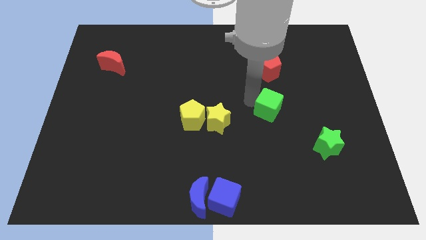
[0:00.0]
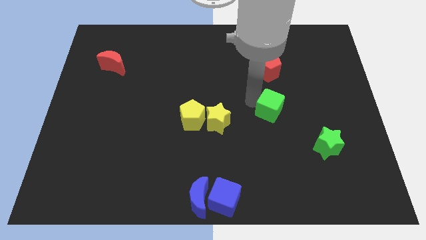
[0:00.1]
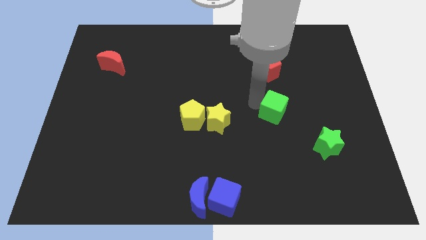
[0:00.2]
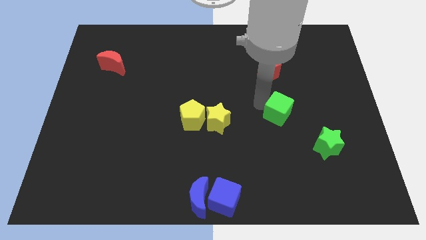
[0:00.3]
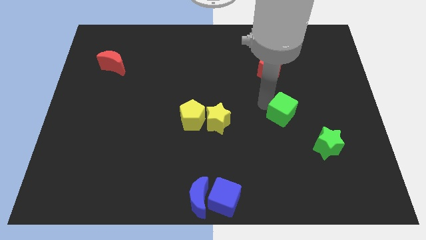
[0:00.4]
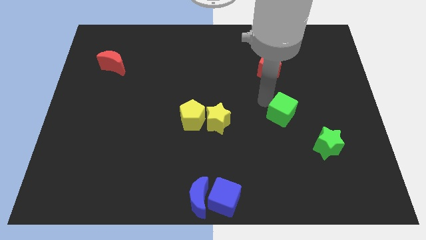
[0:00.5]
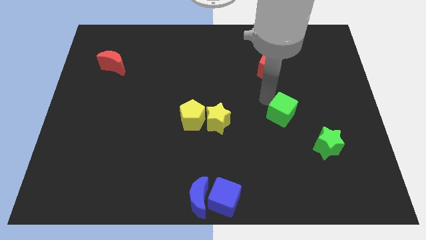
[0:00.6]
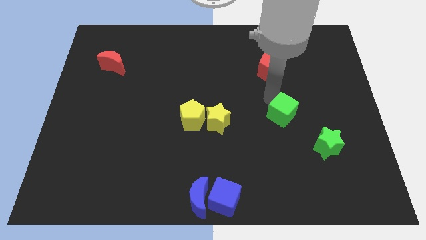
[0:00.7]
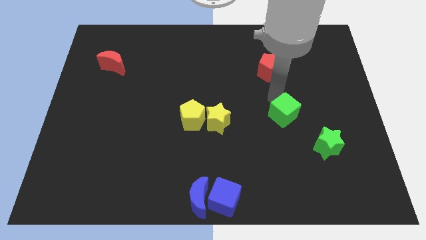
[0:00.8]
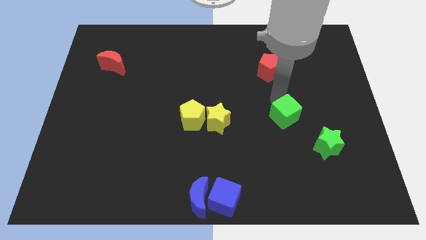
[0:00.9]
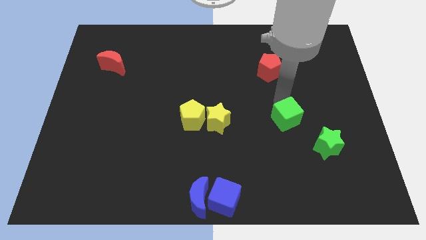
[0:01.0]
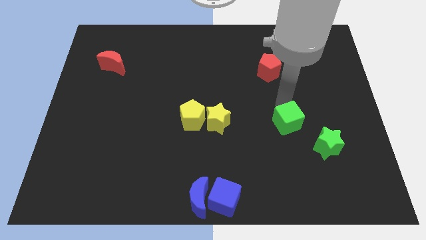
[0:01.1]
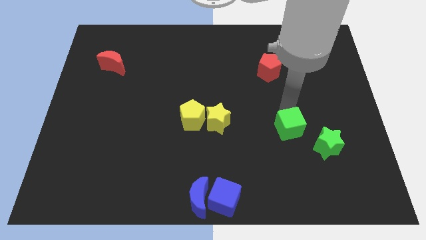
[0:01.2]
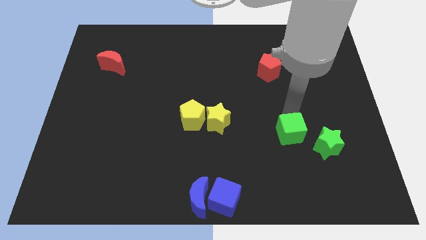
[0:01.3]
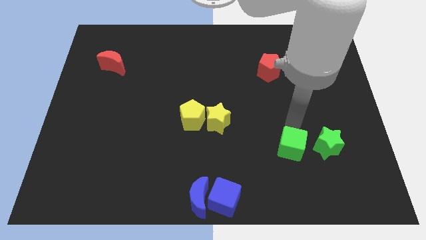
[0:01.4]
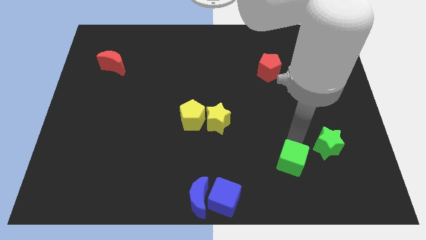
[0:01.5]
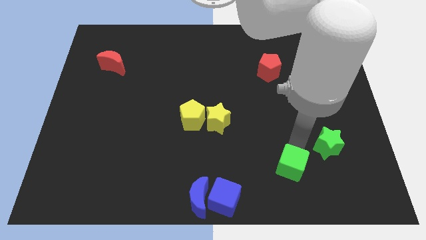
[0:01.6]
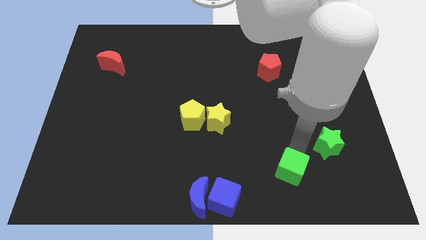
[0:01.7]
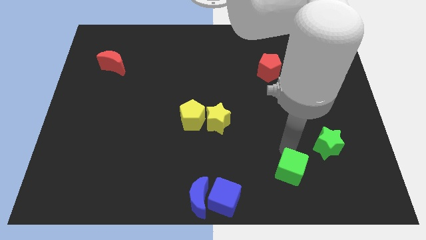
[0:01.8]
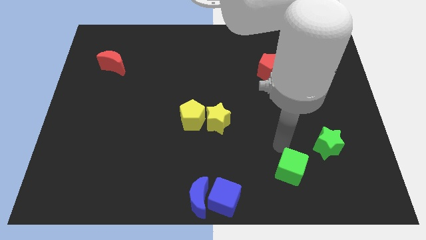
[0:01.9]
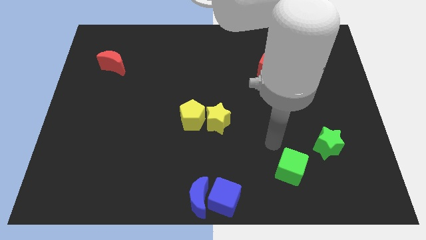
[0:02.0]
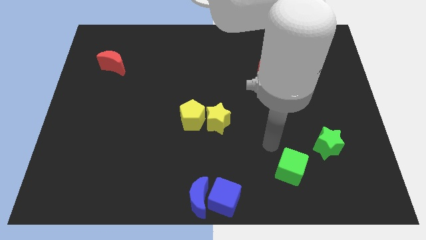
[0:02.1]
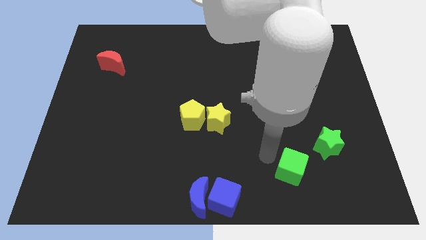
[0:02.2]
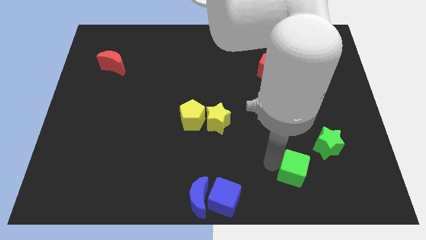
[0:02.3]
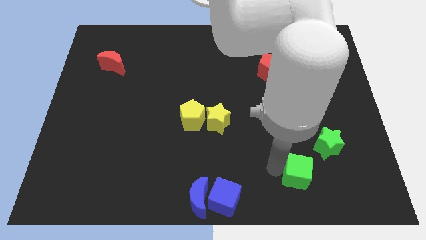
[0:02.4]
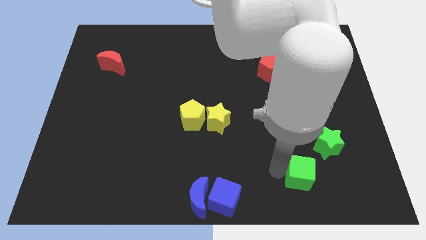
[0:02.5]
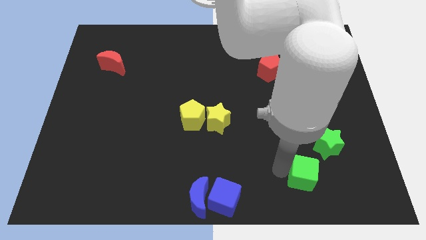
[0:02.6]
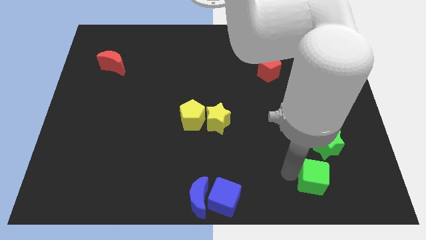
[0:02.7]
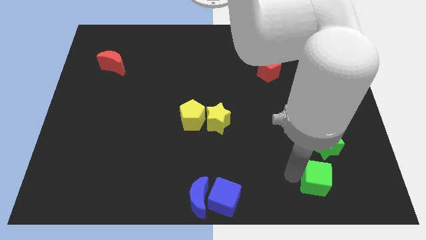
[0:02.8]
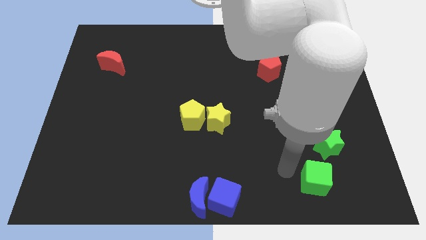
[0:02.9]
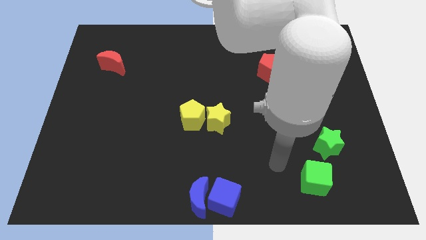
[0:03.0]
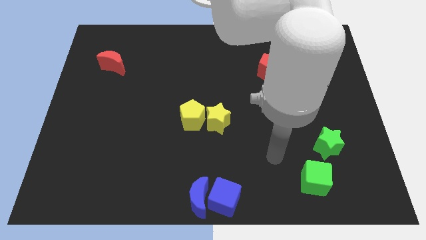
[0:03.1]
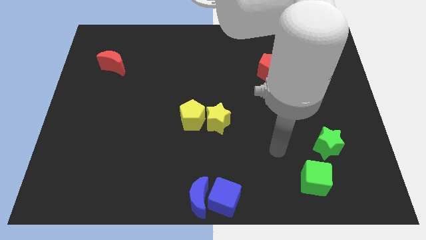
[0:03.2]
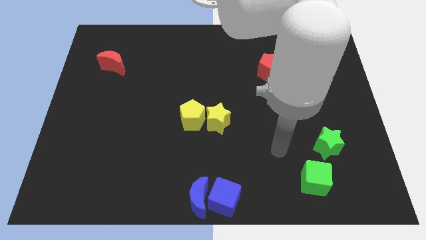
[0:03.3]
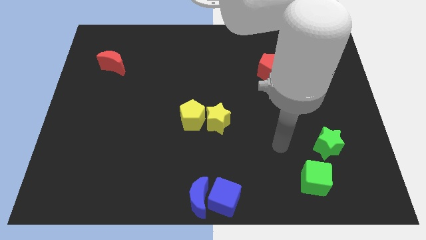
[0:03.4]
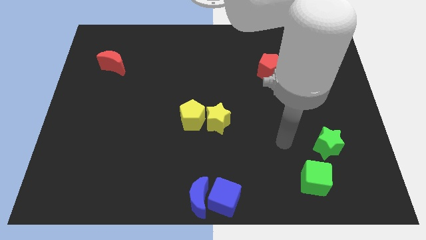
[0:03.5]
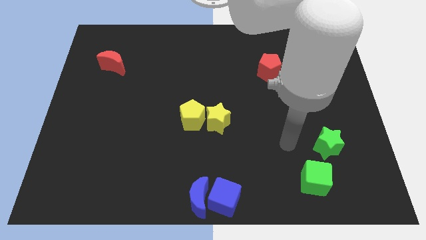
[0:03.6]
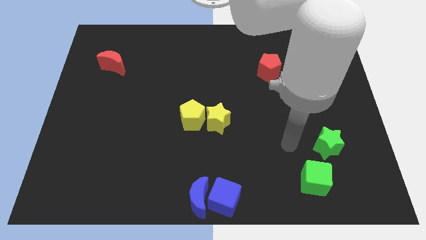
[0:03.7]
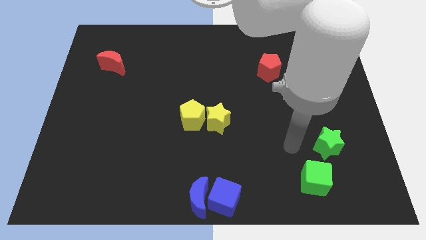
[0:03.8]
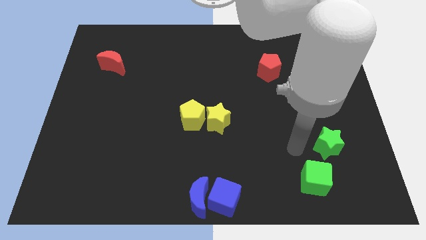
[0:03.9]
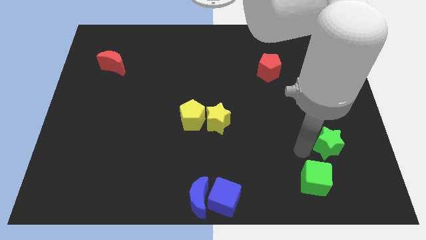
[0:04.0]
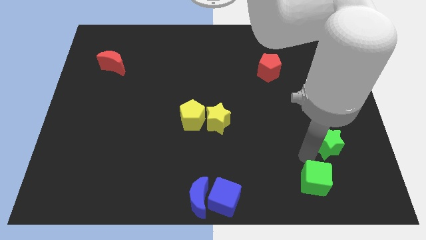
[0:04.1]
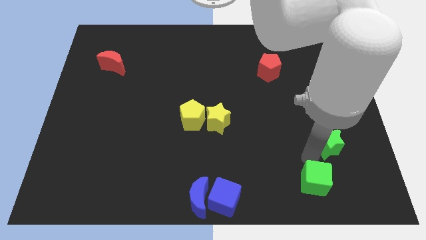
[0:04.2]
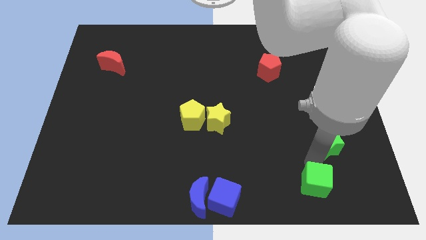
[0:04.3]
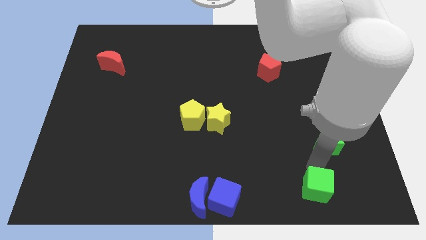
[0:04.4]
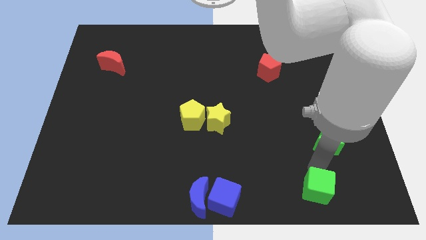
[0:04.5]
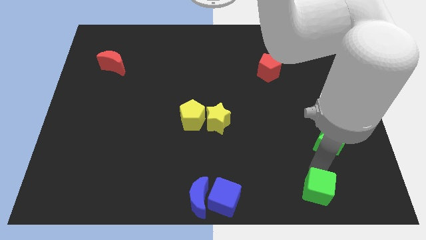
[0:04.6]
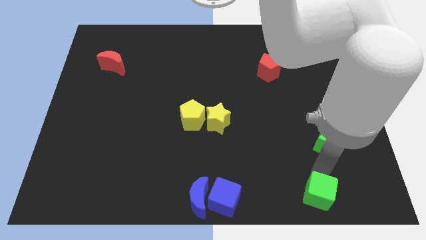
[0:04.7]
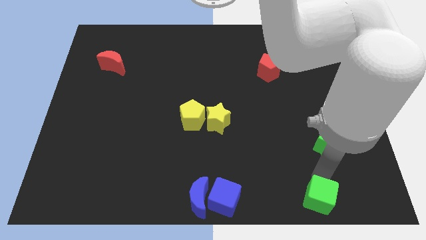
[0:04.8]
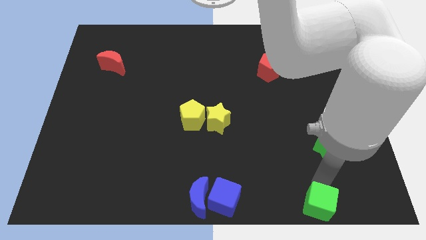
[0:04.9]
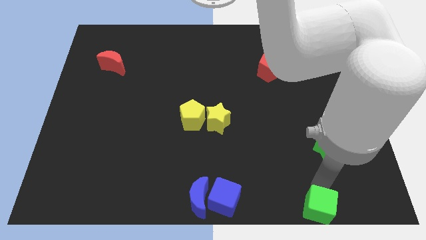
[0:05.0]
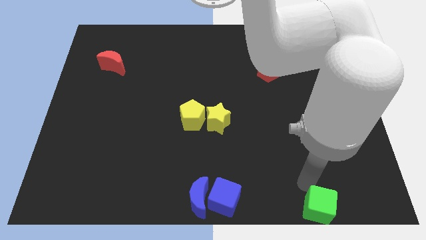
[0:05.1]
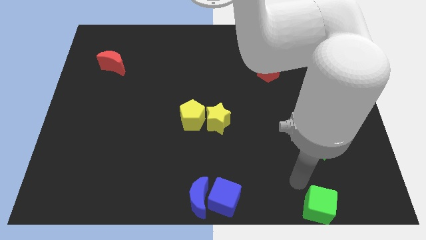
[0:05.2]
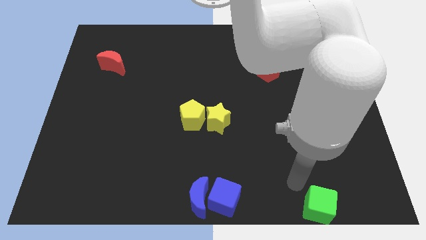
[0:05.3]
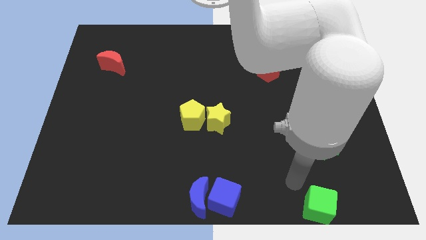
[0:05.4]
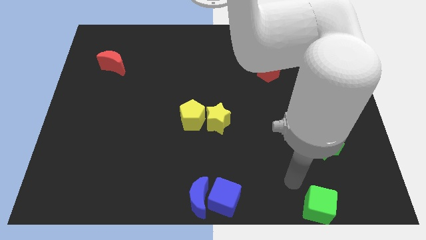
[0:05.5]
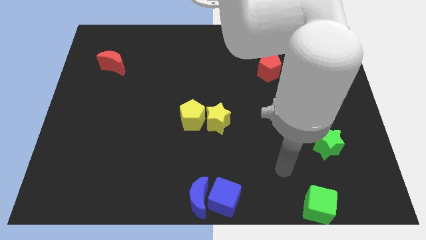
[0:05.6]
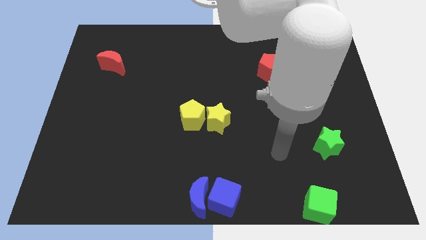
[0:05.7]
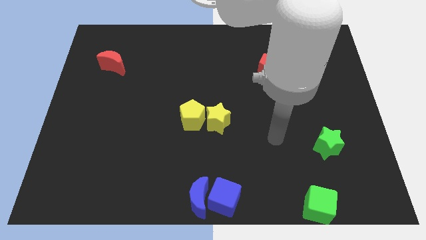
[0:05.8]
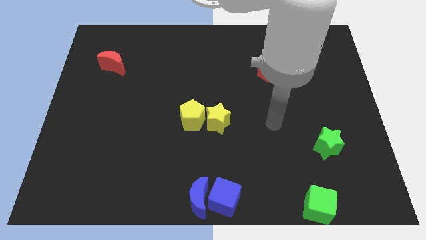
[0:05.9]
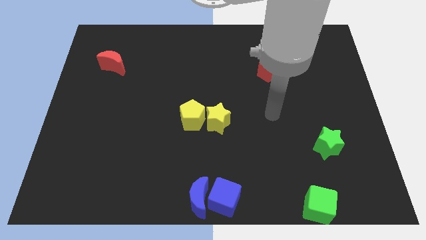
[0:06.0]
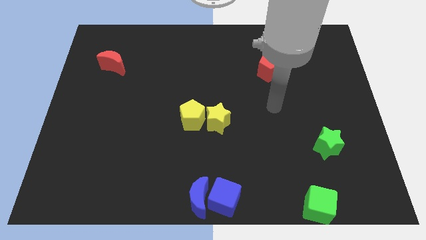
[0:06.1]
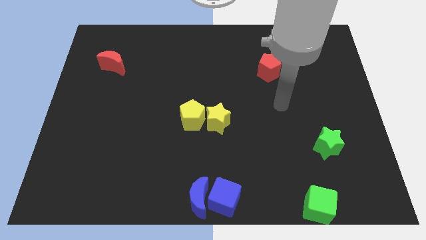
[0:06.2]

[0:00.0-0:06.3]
move the green cube towards the bottom of the board

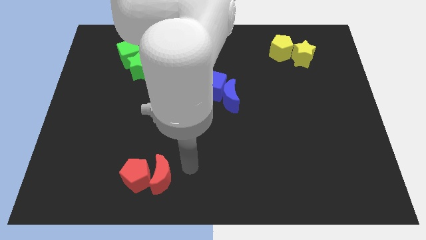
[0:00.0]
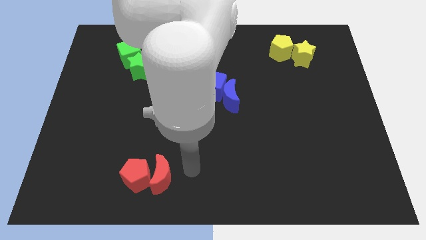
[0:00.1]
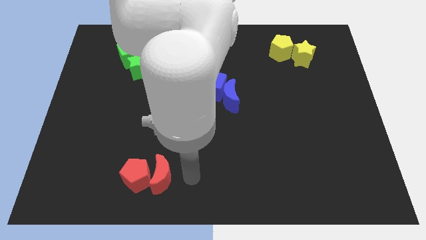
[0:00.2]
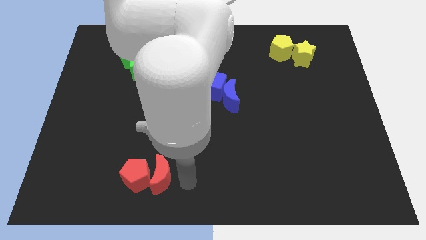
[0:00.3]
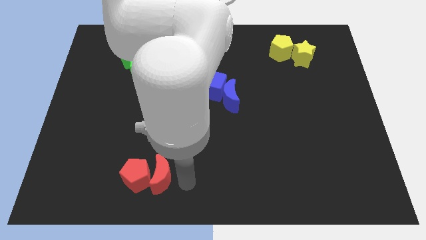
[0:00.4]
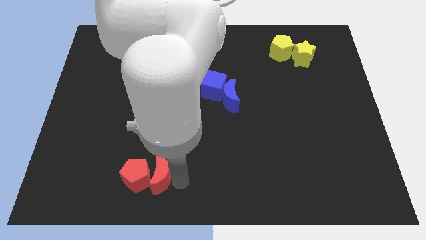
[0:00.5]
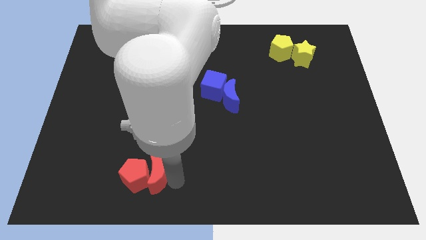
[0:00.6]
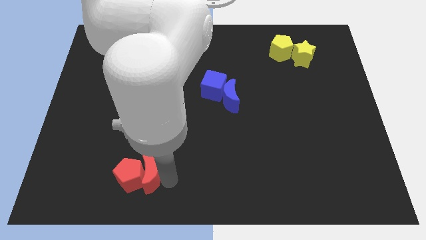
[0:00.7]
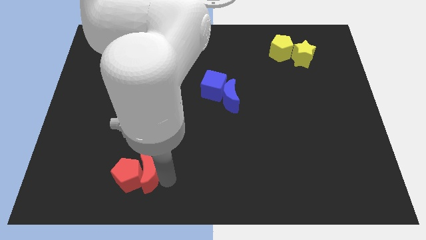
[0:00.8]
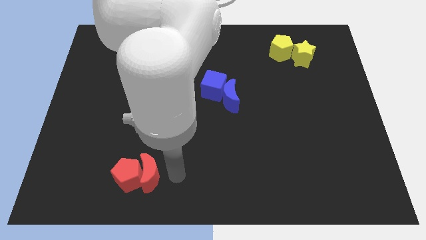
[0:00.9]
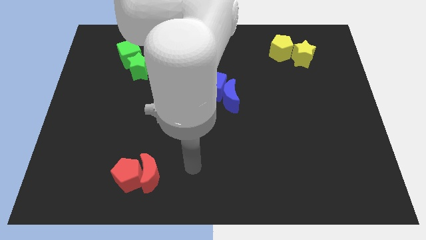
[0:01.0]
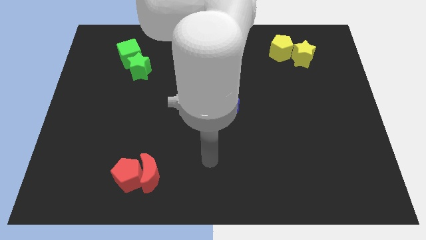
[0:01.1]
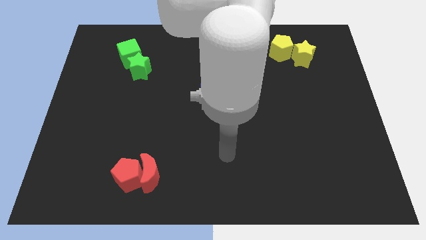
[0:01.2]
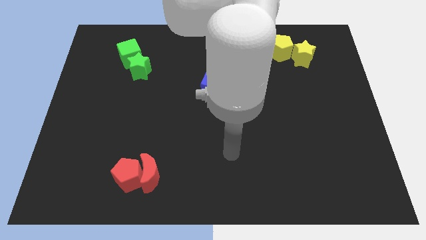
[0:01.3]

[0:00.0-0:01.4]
move the red pentagon with the red crescent slightly left

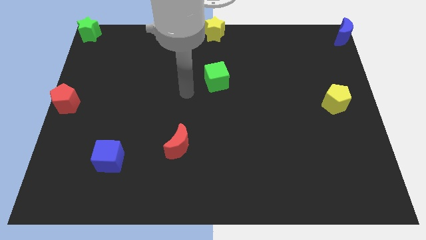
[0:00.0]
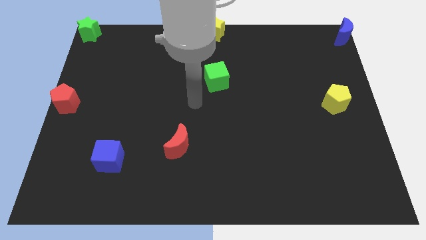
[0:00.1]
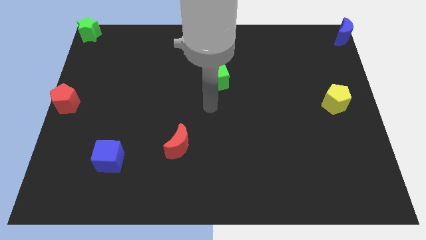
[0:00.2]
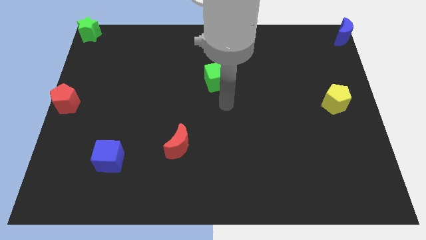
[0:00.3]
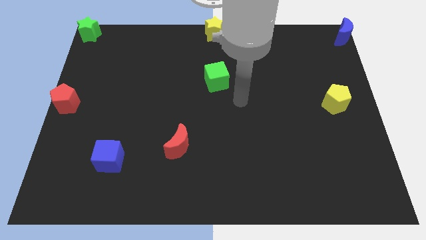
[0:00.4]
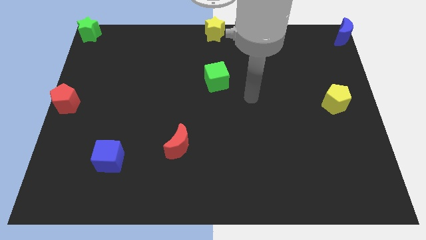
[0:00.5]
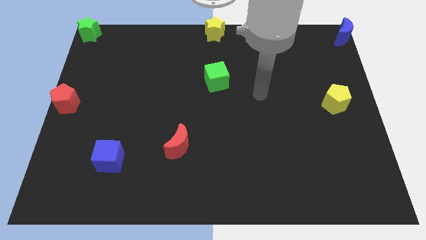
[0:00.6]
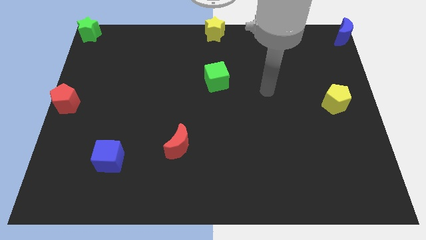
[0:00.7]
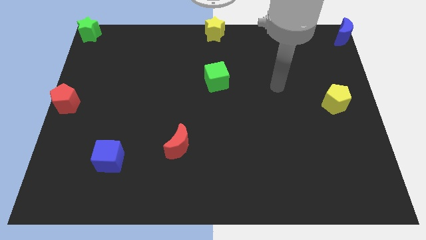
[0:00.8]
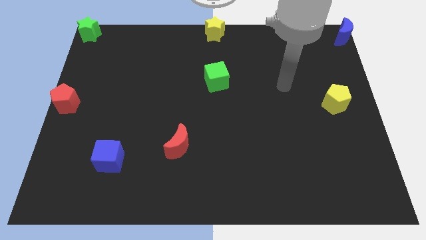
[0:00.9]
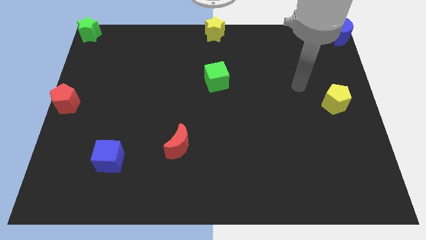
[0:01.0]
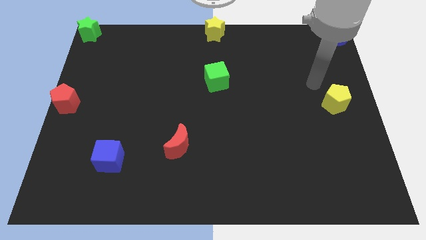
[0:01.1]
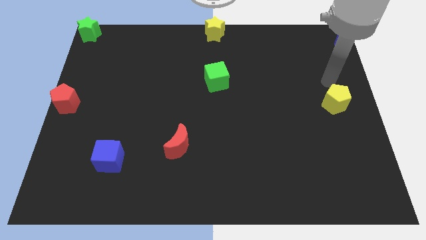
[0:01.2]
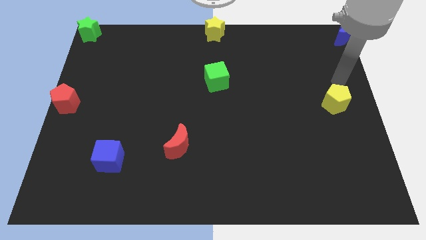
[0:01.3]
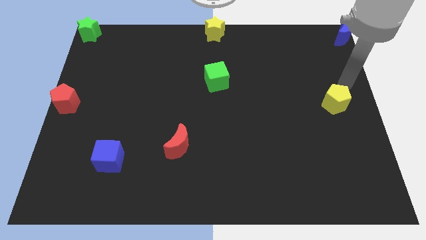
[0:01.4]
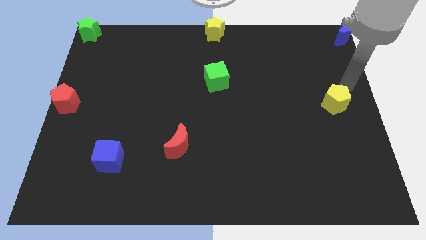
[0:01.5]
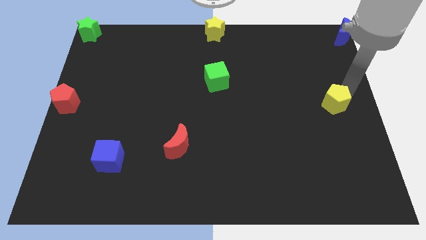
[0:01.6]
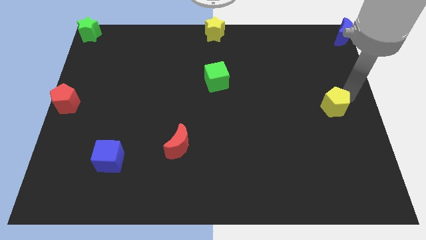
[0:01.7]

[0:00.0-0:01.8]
move your arm towards the yellow pentagon
